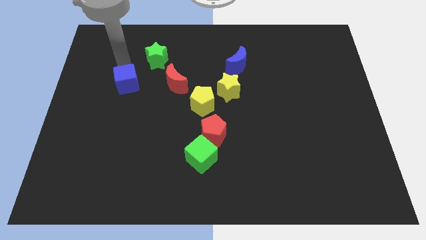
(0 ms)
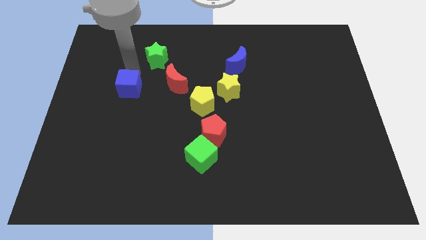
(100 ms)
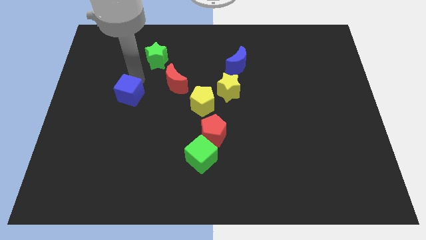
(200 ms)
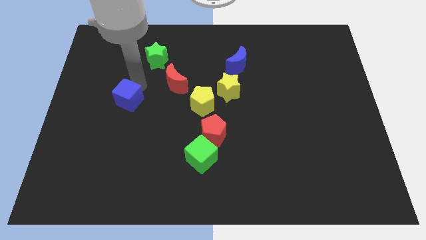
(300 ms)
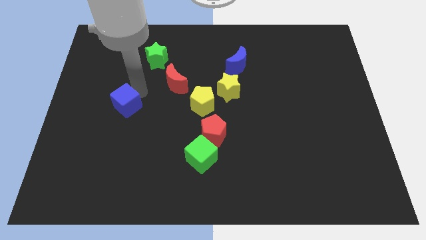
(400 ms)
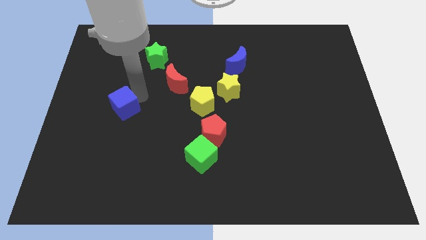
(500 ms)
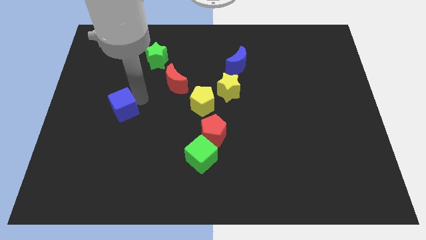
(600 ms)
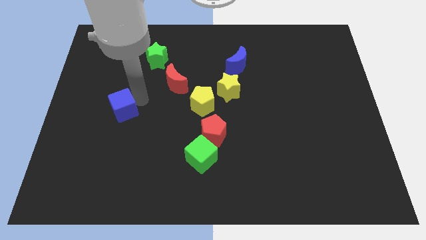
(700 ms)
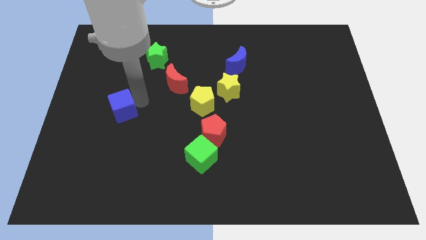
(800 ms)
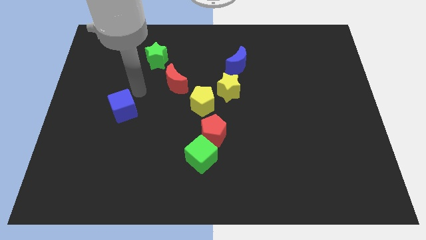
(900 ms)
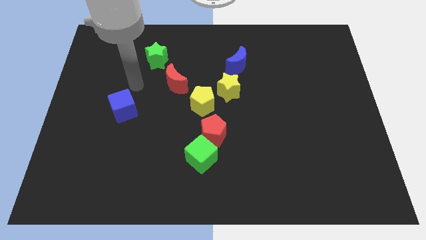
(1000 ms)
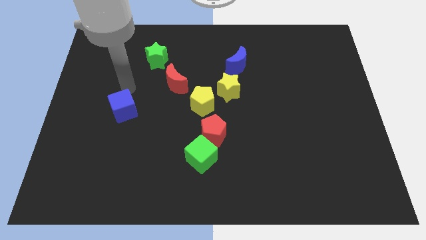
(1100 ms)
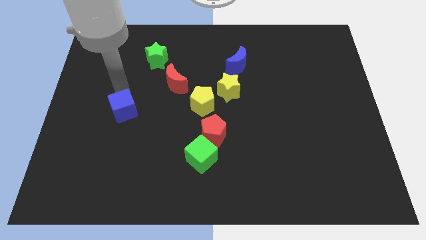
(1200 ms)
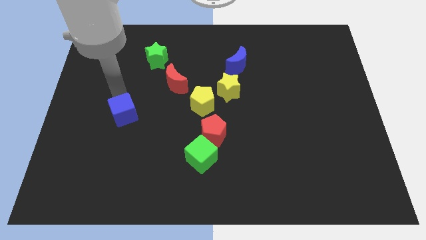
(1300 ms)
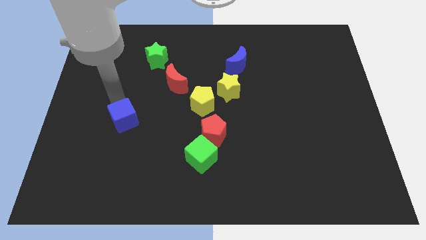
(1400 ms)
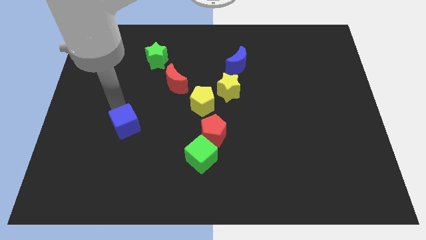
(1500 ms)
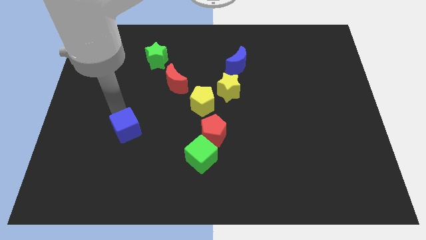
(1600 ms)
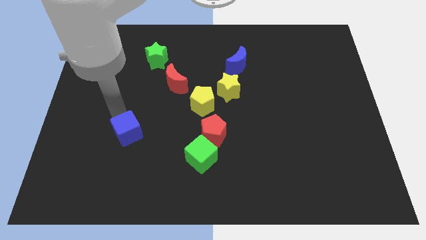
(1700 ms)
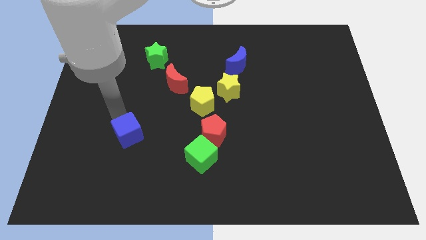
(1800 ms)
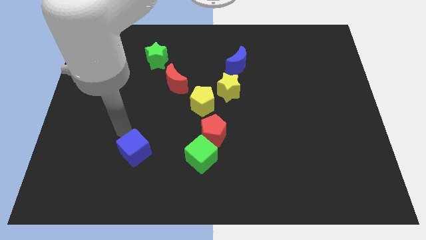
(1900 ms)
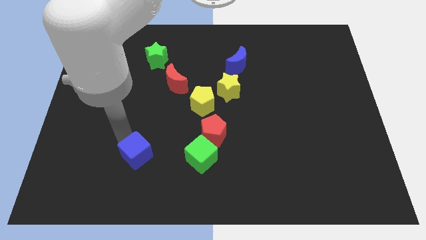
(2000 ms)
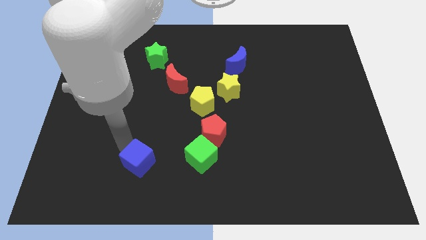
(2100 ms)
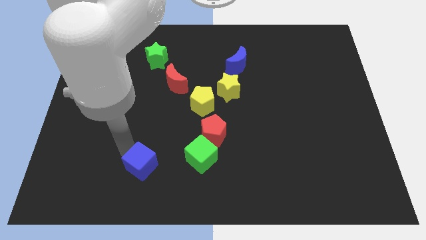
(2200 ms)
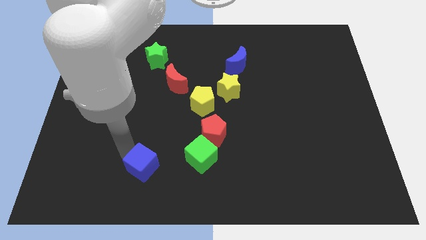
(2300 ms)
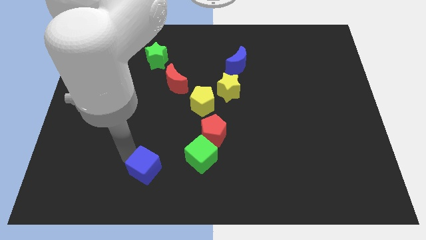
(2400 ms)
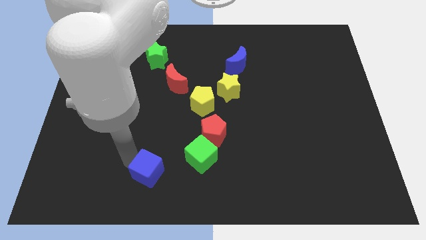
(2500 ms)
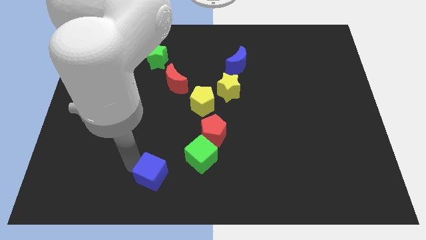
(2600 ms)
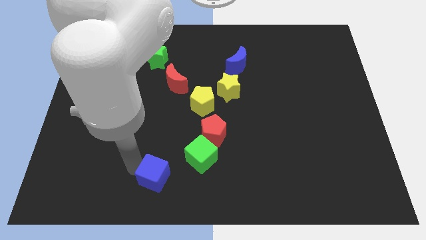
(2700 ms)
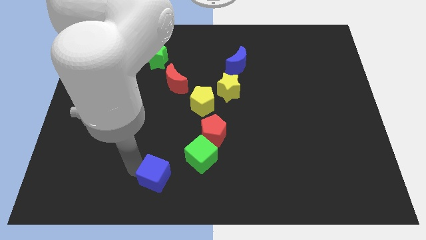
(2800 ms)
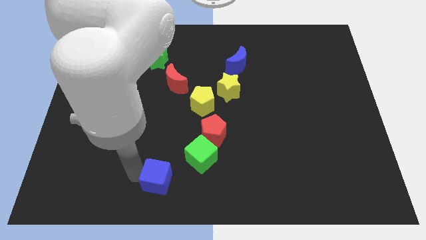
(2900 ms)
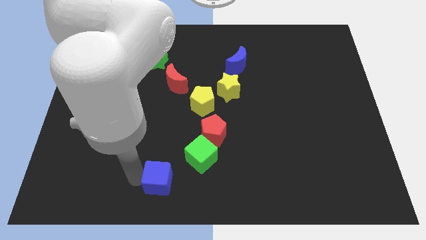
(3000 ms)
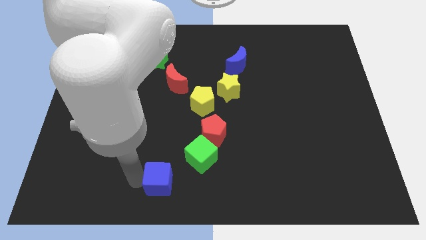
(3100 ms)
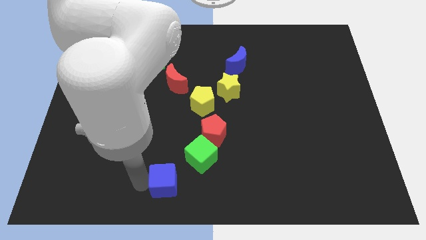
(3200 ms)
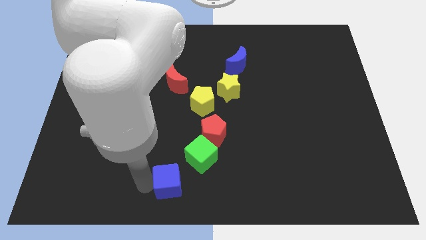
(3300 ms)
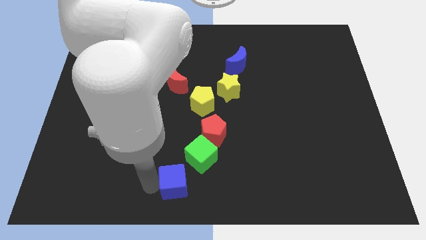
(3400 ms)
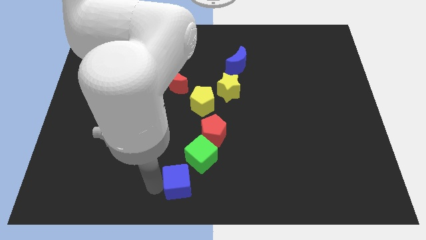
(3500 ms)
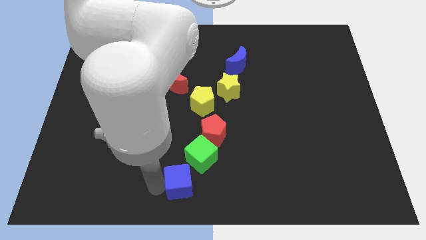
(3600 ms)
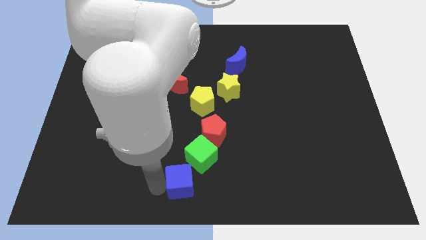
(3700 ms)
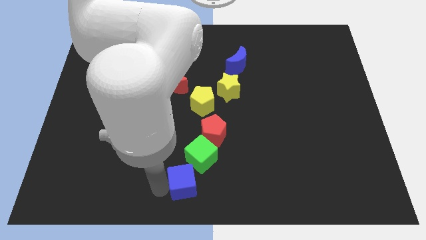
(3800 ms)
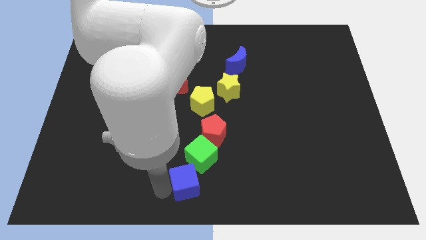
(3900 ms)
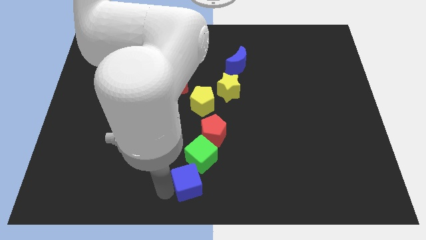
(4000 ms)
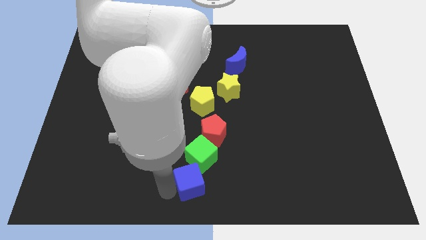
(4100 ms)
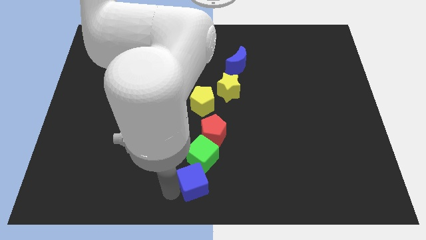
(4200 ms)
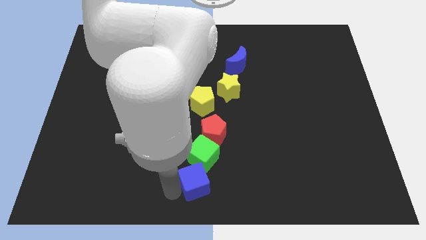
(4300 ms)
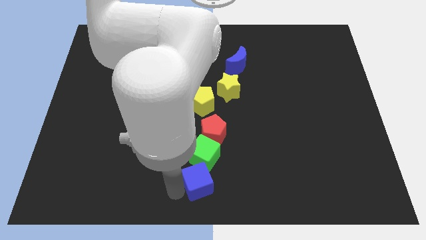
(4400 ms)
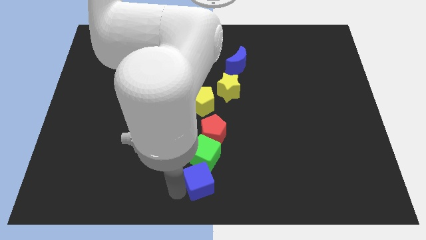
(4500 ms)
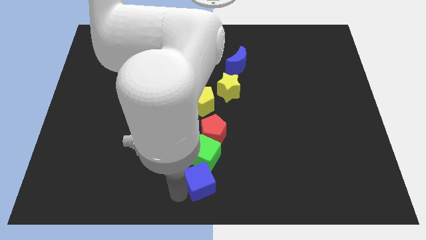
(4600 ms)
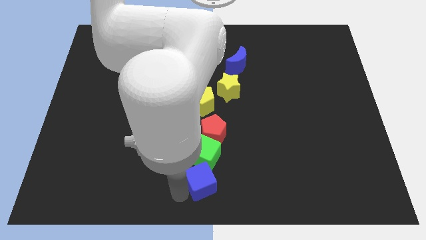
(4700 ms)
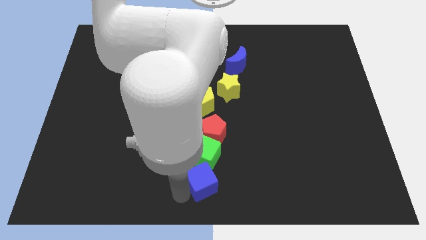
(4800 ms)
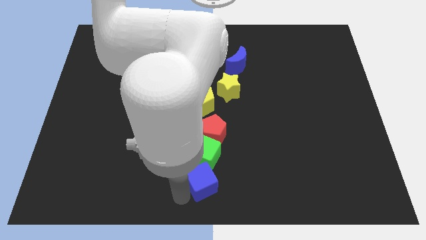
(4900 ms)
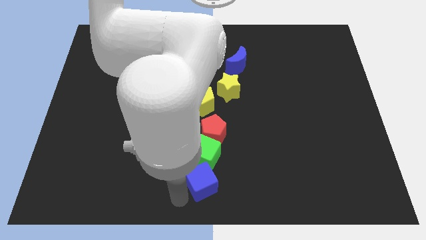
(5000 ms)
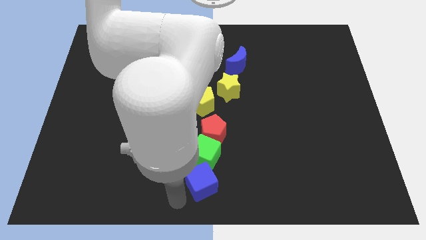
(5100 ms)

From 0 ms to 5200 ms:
push the blue cube into the green cube

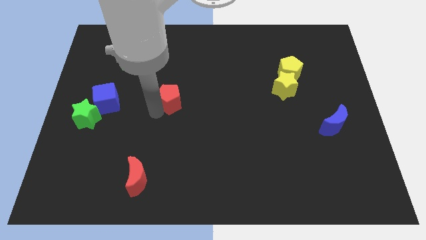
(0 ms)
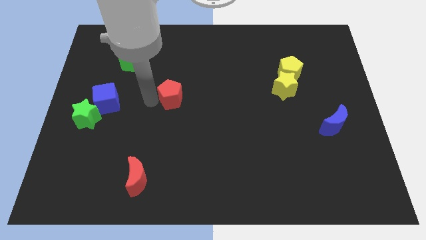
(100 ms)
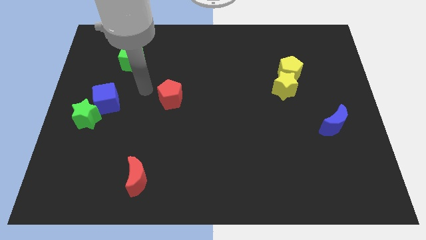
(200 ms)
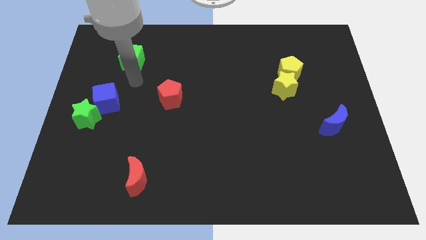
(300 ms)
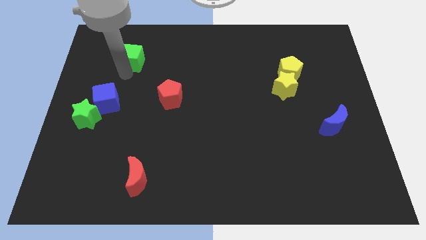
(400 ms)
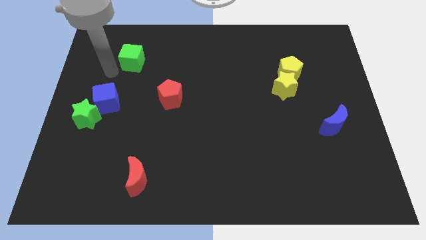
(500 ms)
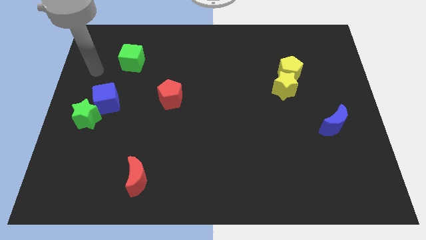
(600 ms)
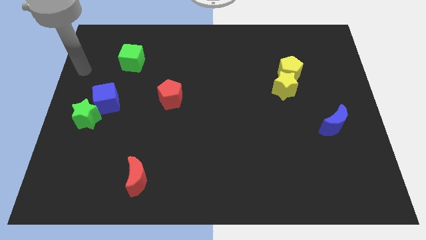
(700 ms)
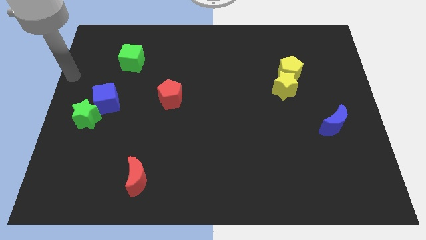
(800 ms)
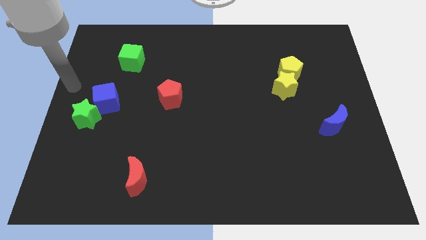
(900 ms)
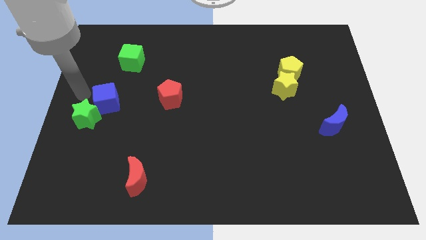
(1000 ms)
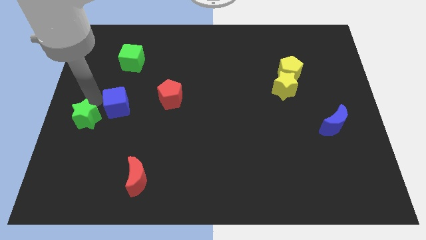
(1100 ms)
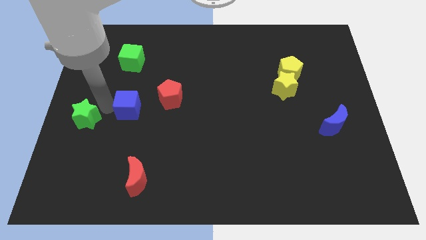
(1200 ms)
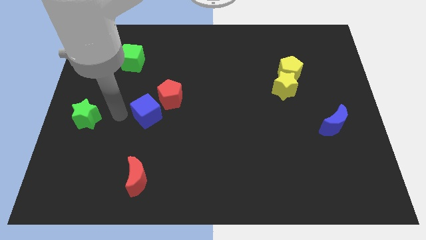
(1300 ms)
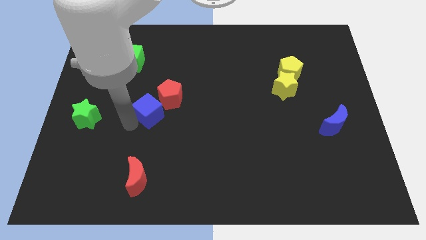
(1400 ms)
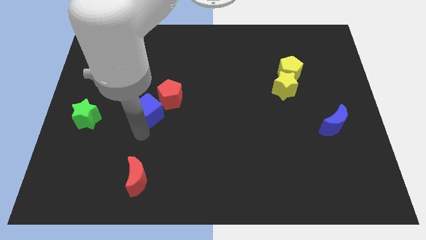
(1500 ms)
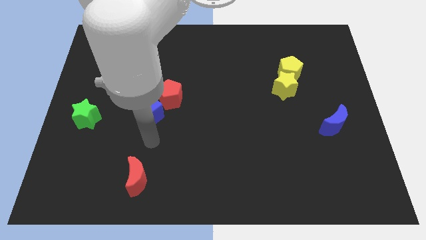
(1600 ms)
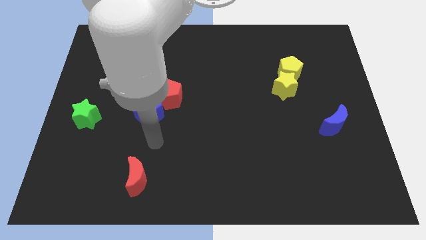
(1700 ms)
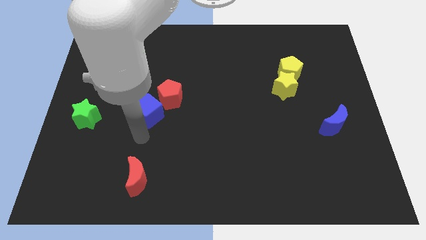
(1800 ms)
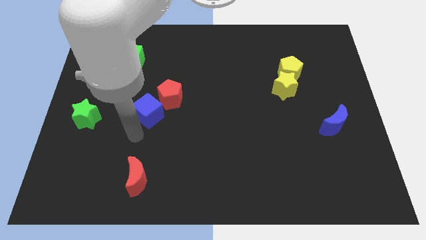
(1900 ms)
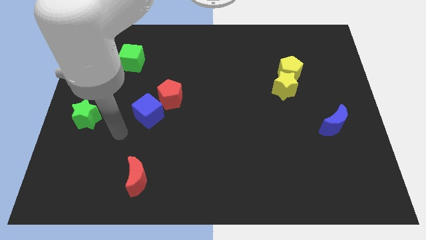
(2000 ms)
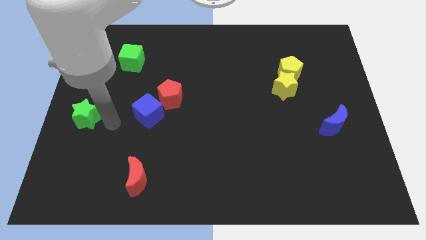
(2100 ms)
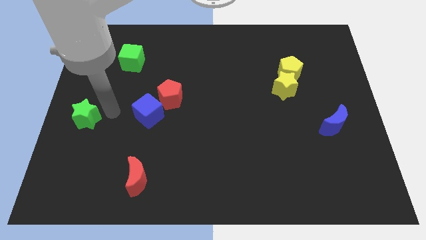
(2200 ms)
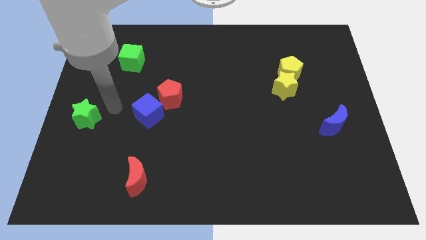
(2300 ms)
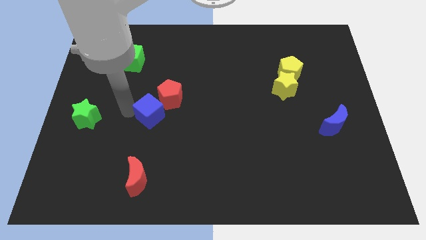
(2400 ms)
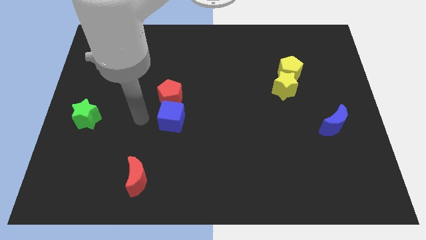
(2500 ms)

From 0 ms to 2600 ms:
move the blue cube to the bottom of the red pentagon

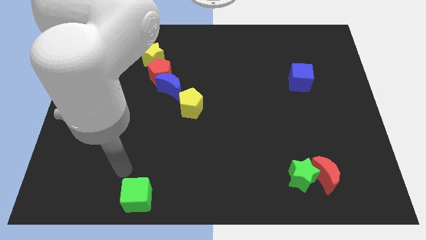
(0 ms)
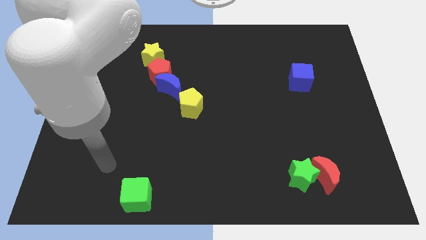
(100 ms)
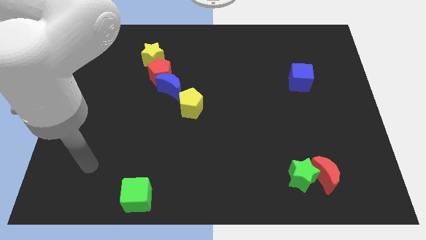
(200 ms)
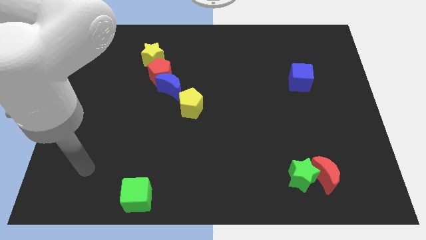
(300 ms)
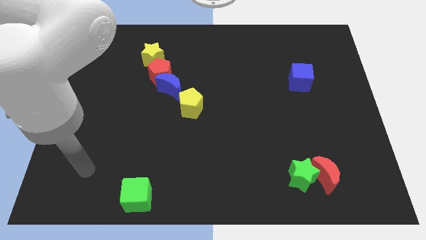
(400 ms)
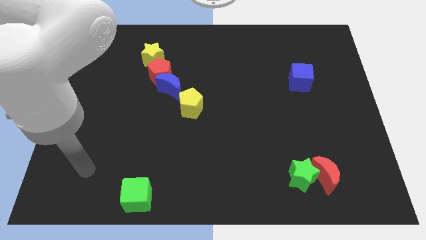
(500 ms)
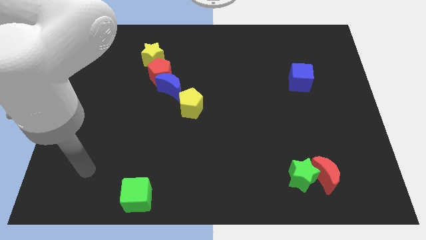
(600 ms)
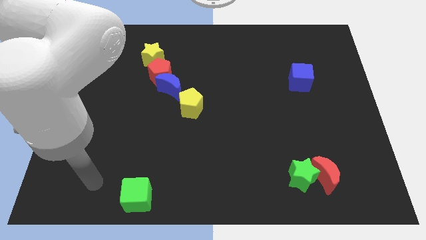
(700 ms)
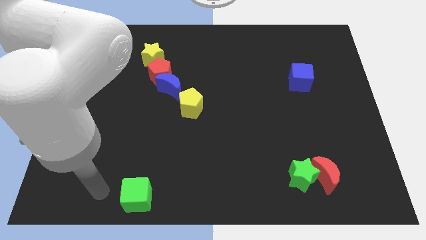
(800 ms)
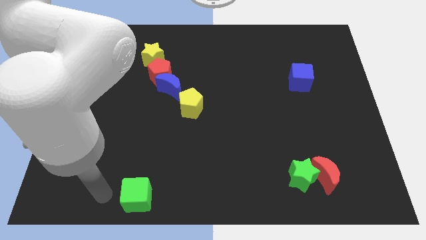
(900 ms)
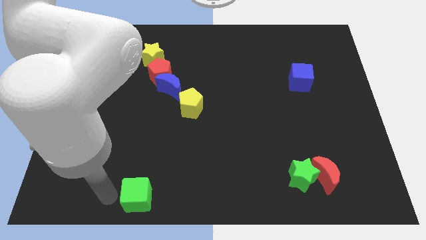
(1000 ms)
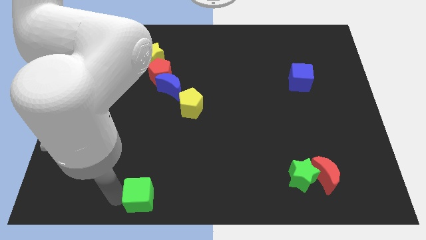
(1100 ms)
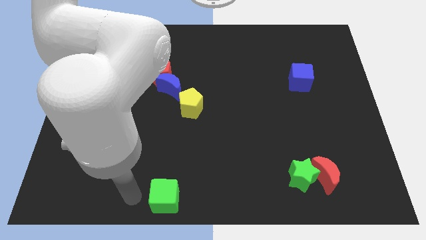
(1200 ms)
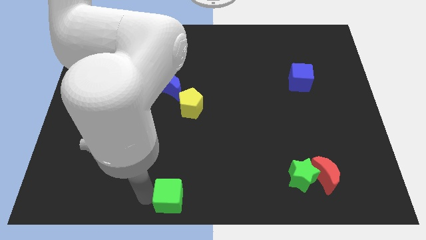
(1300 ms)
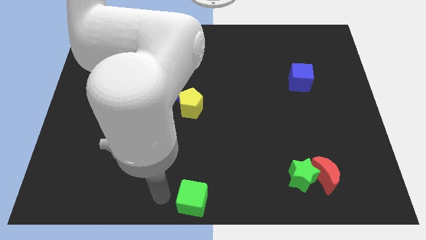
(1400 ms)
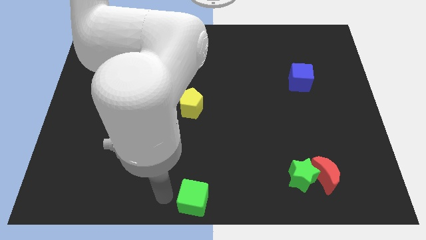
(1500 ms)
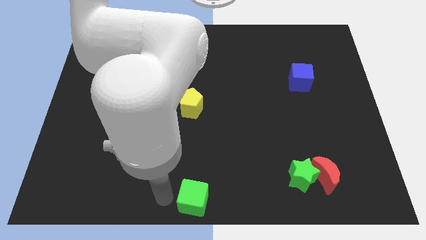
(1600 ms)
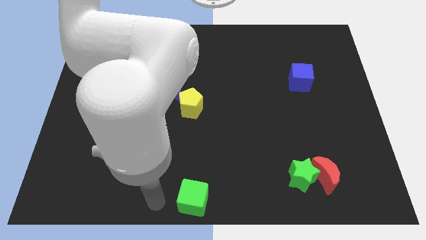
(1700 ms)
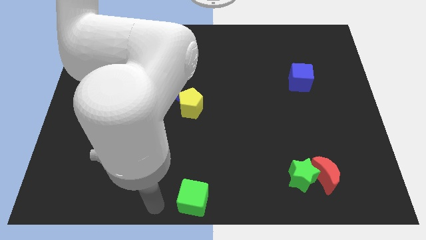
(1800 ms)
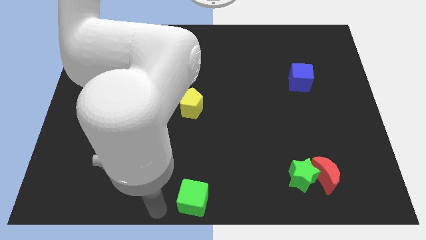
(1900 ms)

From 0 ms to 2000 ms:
place the green cube at the bottom center of the board
